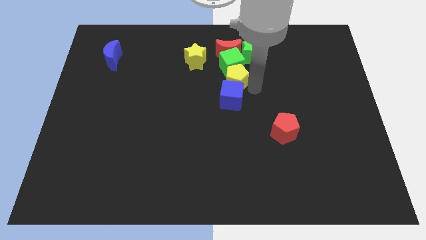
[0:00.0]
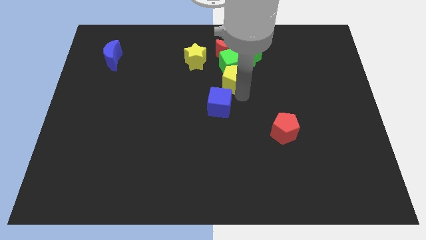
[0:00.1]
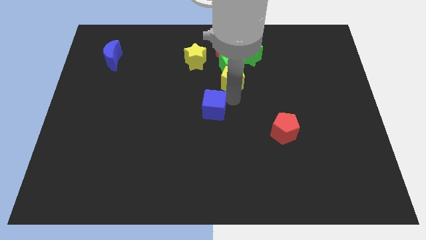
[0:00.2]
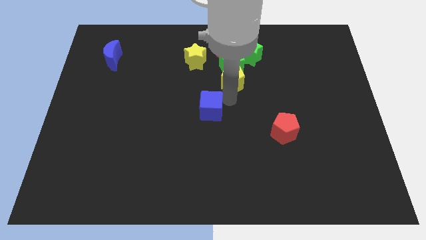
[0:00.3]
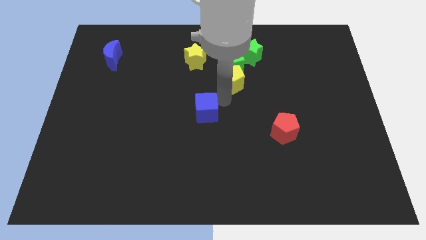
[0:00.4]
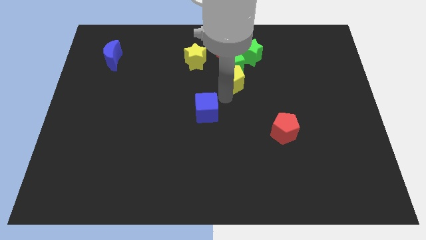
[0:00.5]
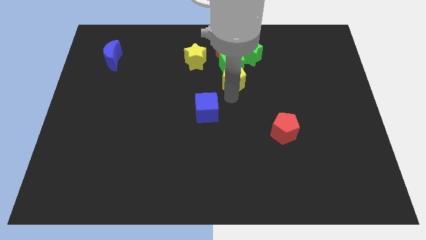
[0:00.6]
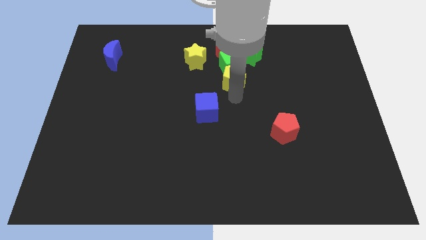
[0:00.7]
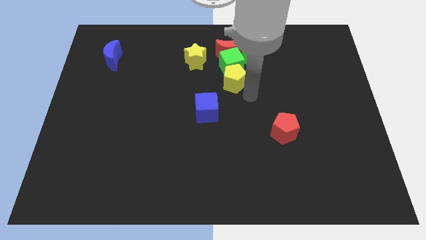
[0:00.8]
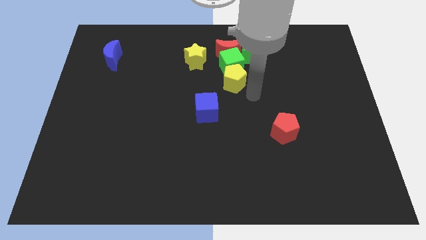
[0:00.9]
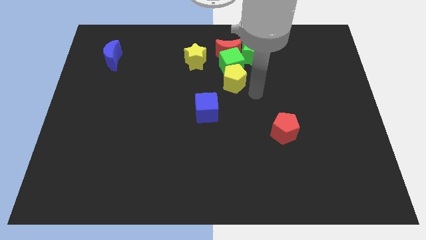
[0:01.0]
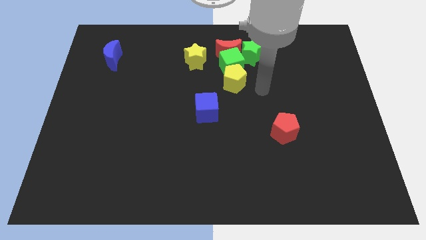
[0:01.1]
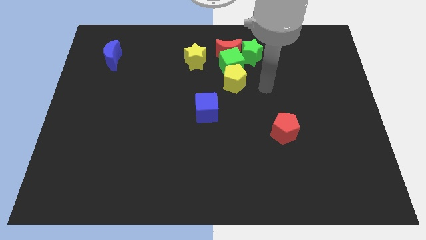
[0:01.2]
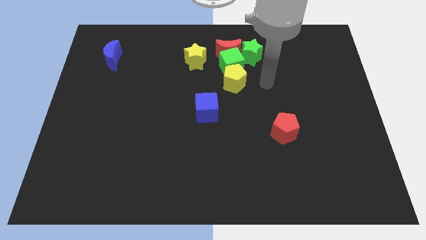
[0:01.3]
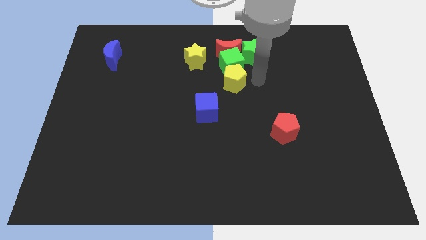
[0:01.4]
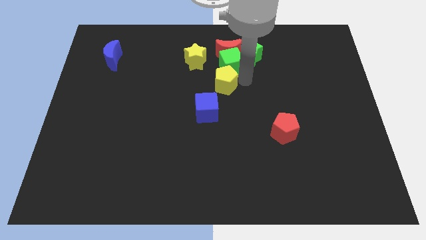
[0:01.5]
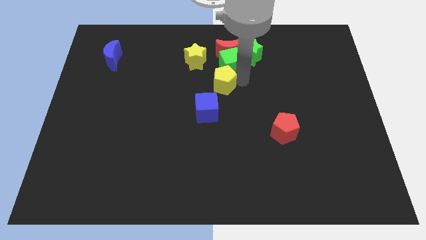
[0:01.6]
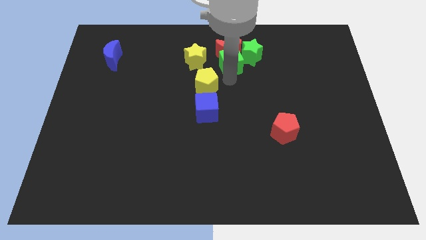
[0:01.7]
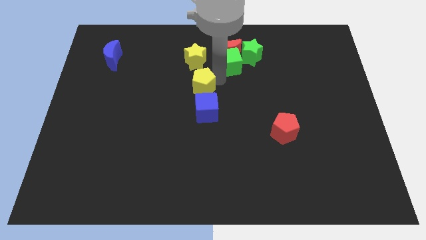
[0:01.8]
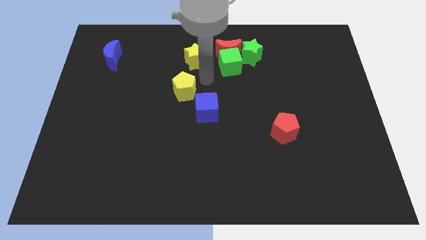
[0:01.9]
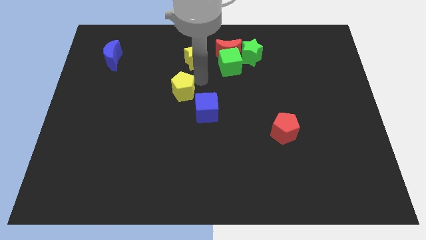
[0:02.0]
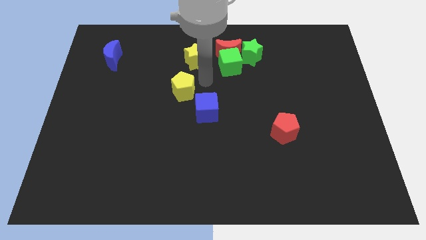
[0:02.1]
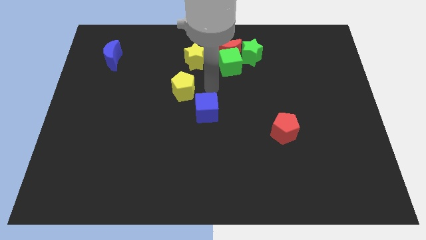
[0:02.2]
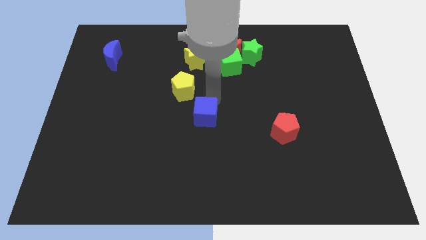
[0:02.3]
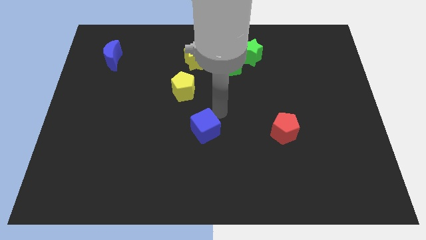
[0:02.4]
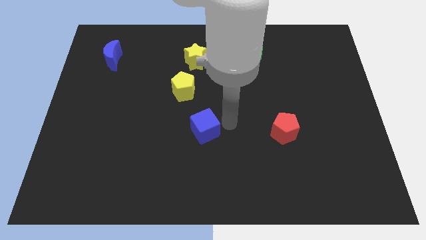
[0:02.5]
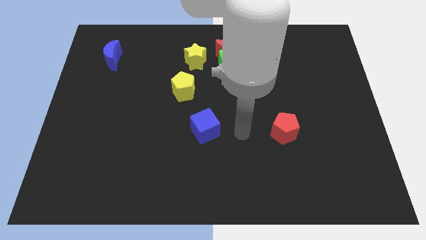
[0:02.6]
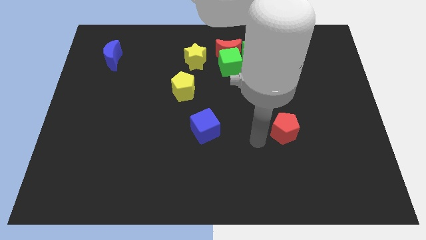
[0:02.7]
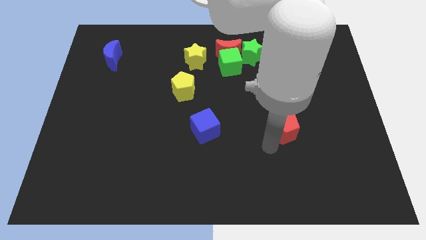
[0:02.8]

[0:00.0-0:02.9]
place the blue cube to the left of the red pentagon

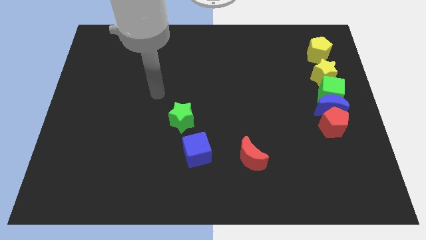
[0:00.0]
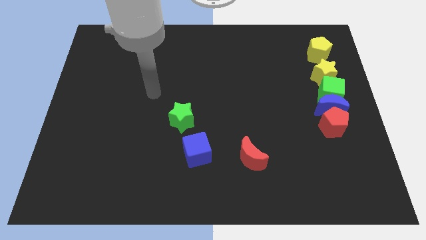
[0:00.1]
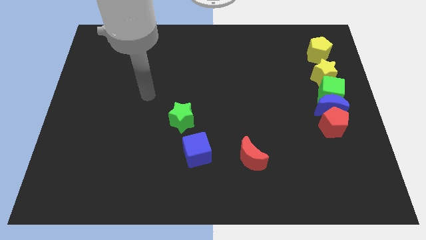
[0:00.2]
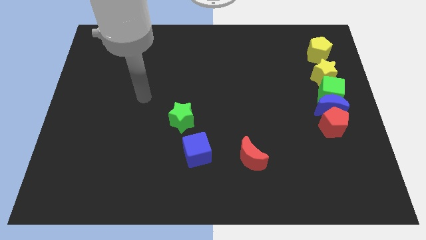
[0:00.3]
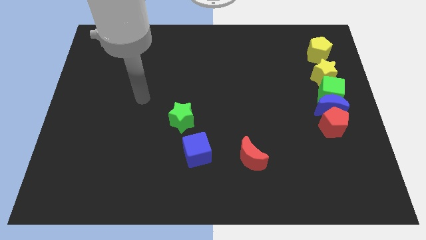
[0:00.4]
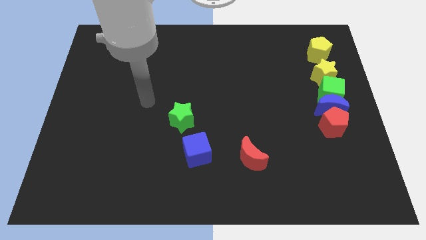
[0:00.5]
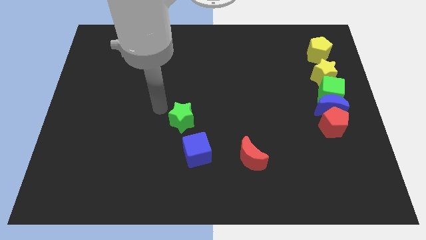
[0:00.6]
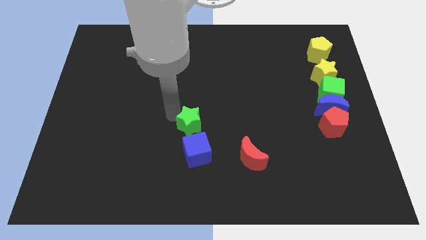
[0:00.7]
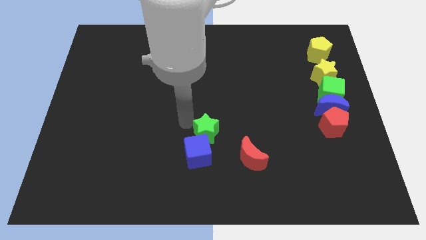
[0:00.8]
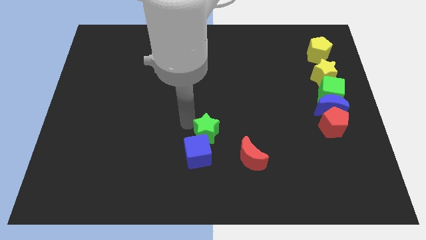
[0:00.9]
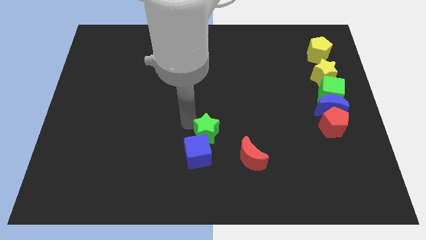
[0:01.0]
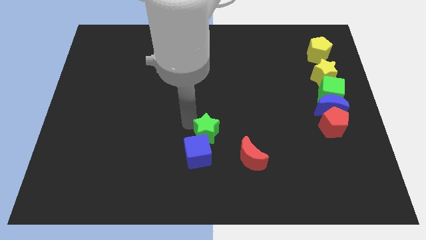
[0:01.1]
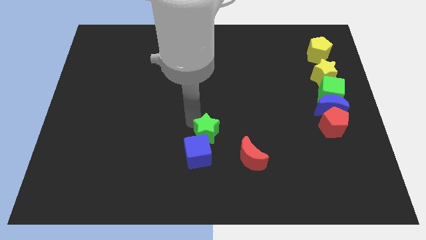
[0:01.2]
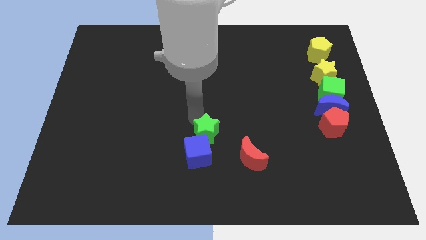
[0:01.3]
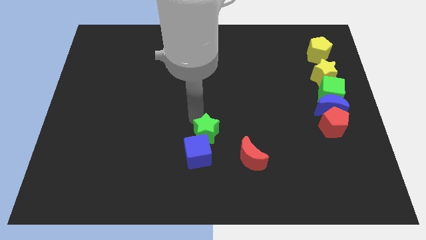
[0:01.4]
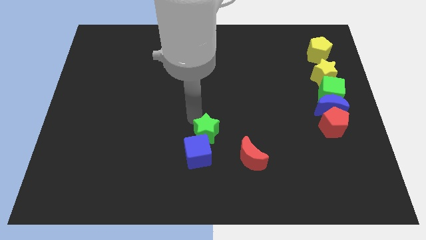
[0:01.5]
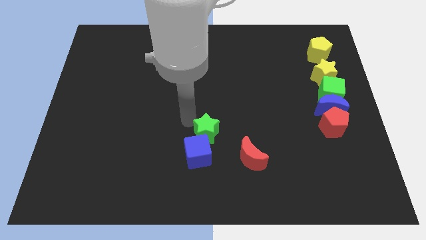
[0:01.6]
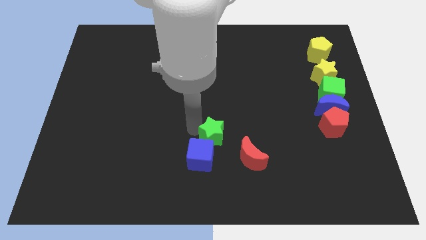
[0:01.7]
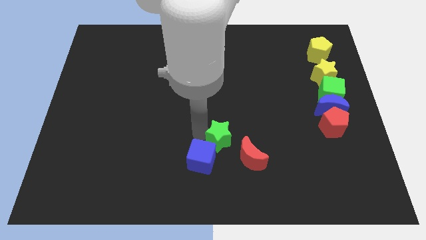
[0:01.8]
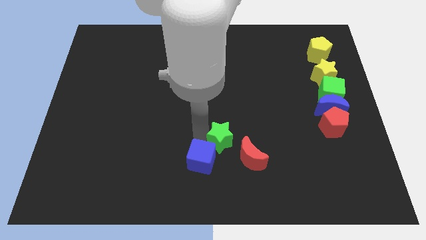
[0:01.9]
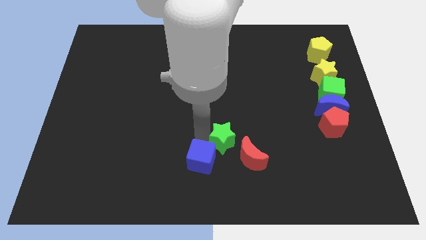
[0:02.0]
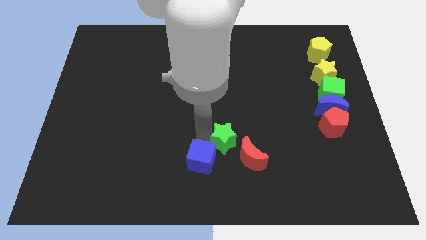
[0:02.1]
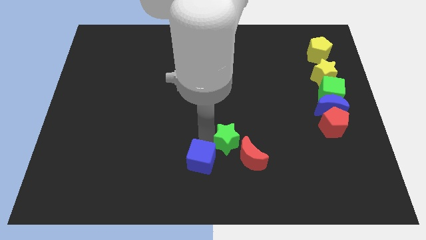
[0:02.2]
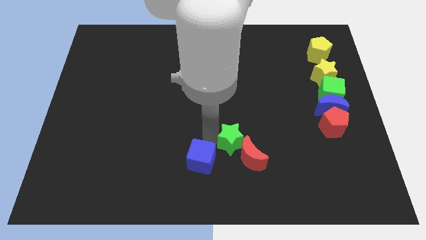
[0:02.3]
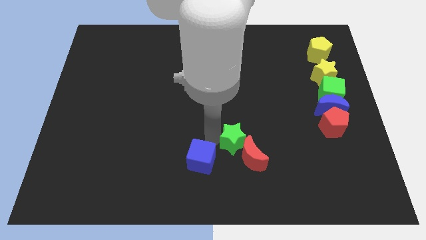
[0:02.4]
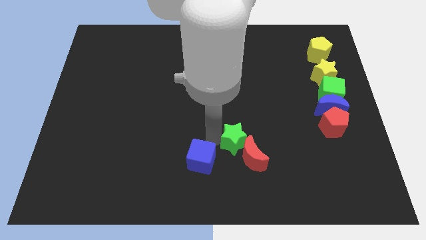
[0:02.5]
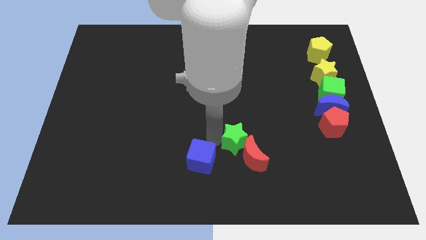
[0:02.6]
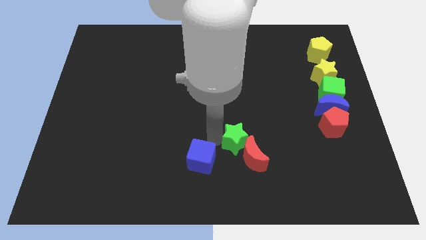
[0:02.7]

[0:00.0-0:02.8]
move the green star towards the top side of the red crescent

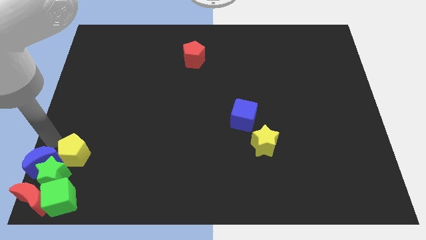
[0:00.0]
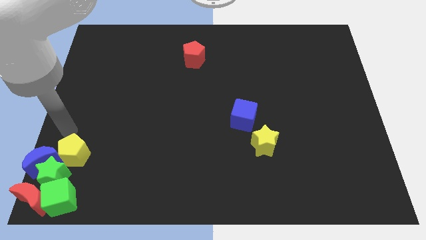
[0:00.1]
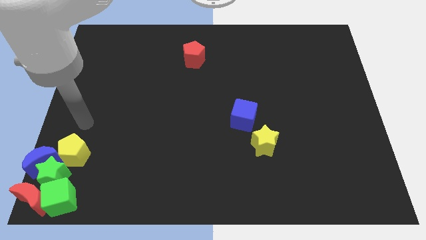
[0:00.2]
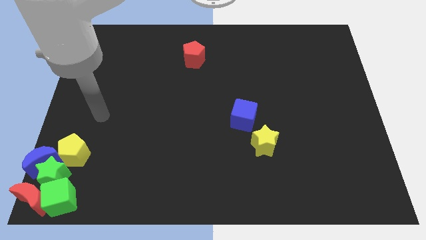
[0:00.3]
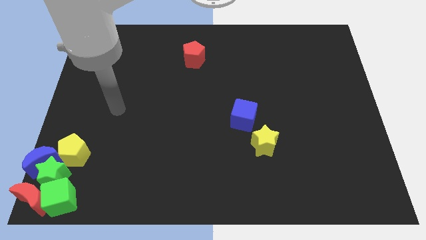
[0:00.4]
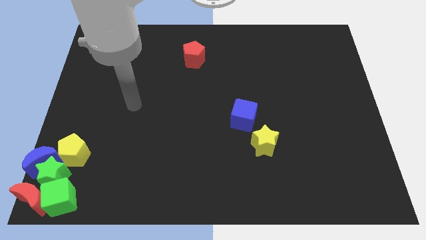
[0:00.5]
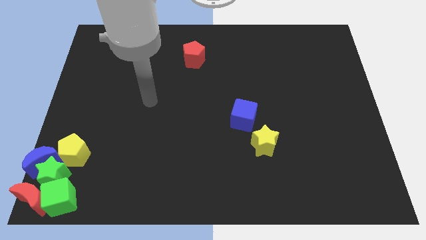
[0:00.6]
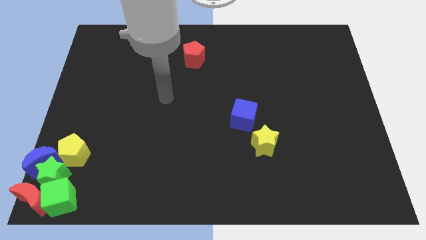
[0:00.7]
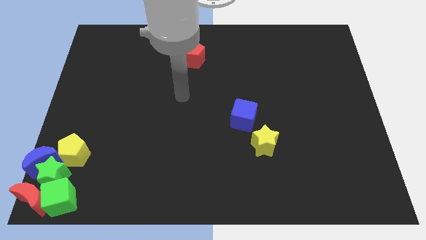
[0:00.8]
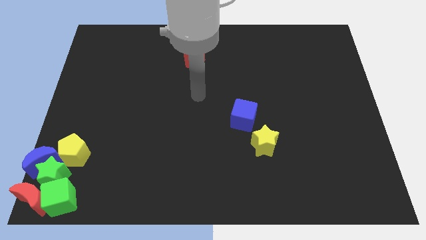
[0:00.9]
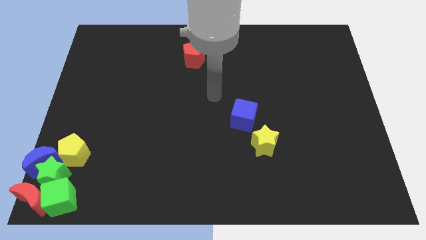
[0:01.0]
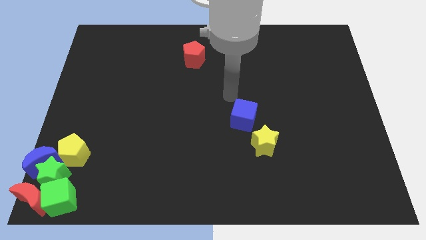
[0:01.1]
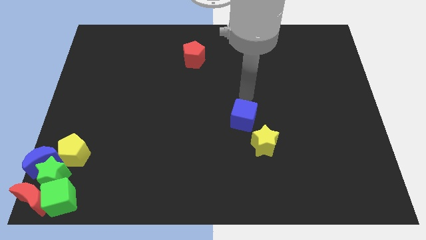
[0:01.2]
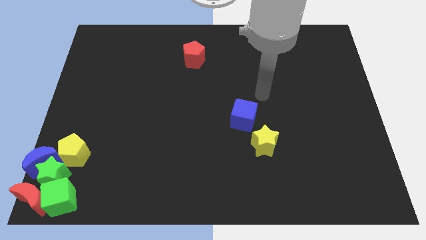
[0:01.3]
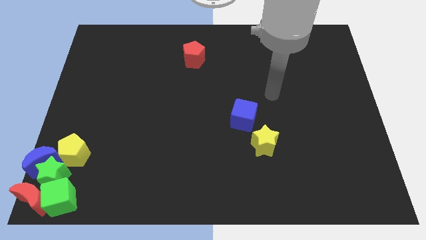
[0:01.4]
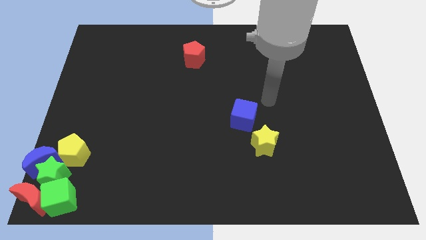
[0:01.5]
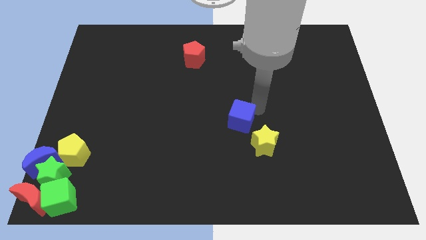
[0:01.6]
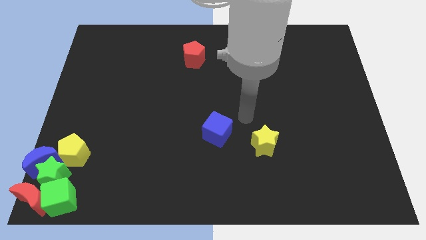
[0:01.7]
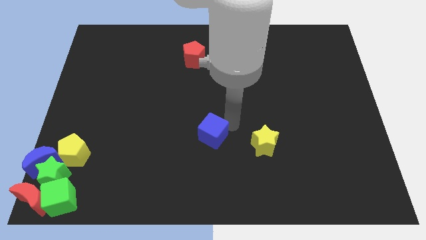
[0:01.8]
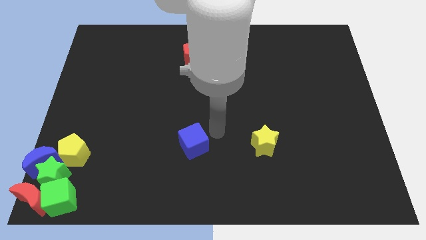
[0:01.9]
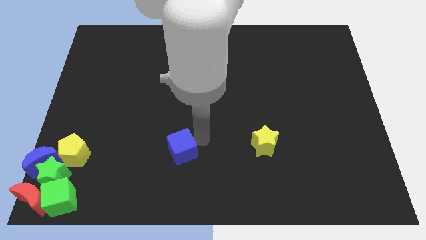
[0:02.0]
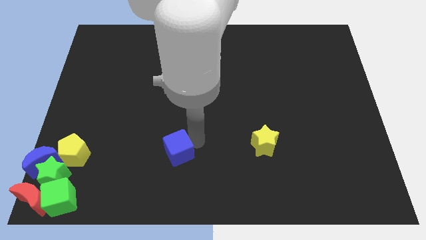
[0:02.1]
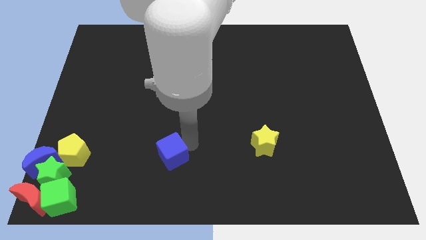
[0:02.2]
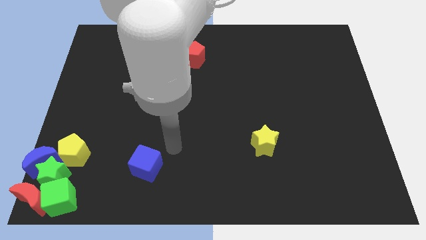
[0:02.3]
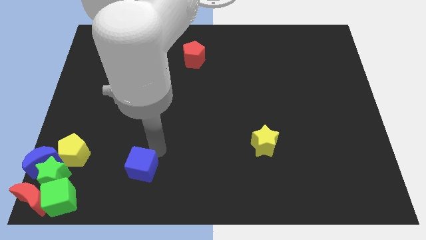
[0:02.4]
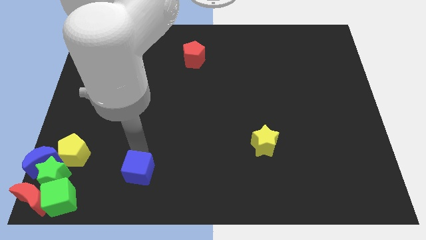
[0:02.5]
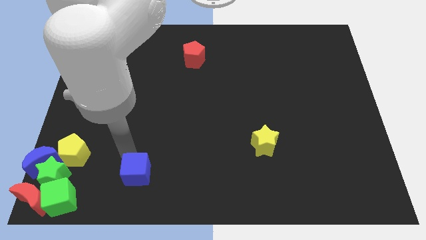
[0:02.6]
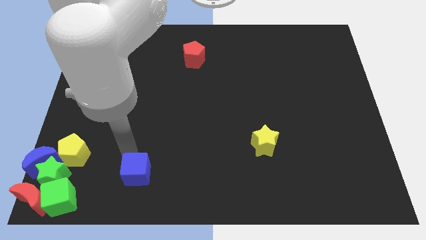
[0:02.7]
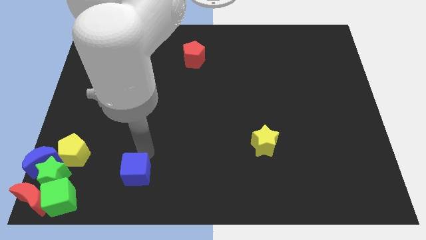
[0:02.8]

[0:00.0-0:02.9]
move the arm away from the blue moon

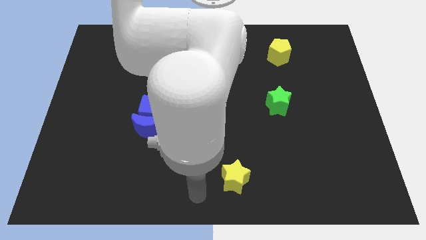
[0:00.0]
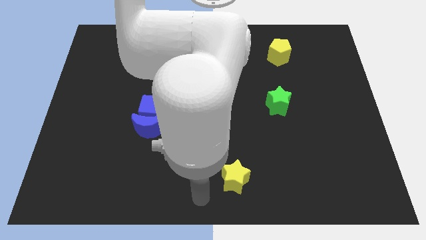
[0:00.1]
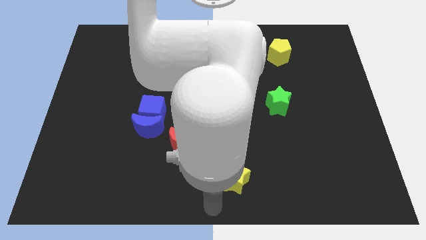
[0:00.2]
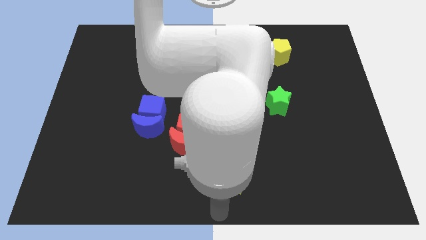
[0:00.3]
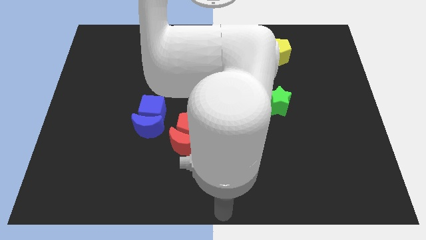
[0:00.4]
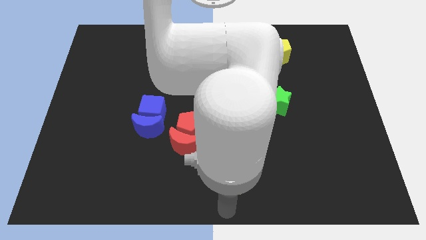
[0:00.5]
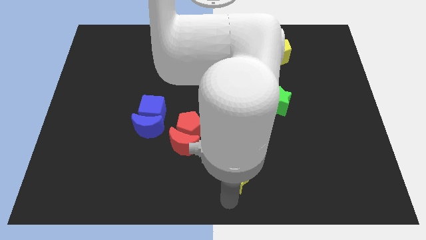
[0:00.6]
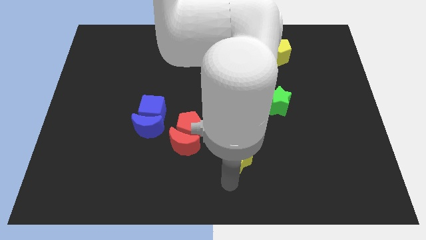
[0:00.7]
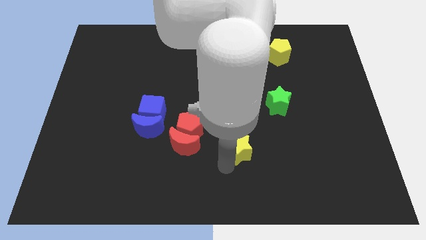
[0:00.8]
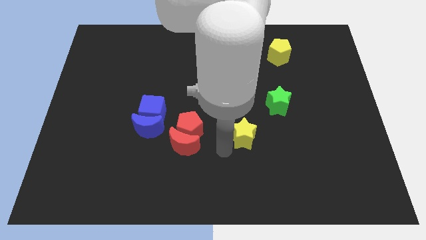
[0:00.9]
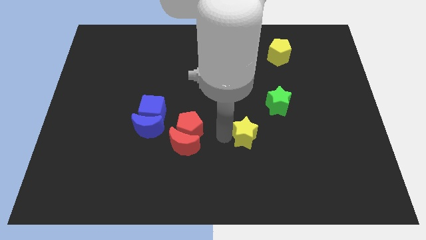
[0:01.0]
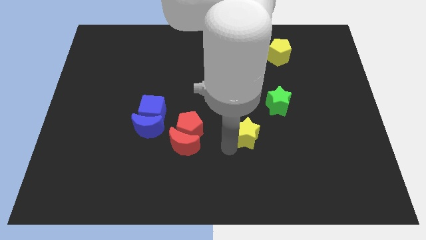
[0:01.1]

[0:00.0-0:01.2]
place yellow star to the right of red pentagon
